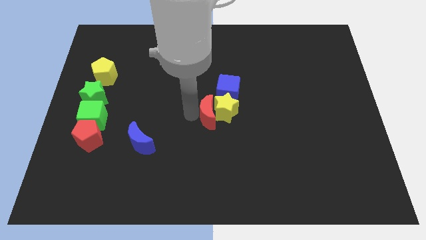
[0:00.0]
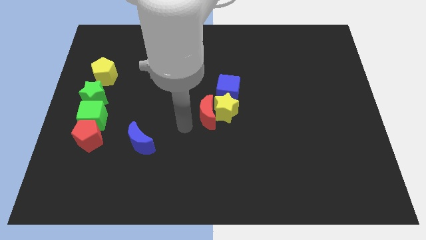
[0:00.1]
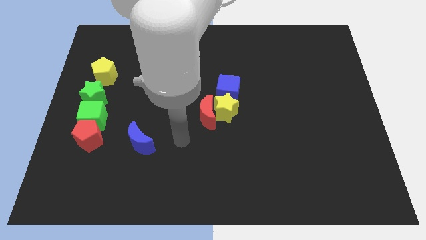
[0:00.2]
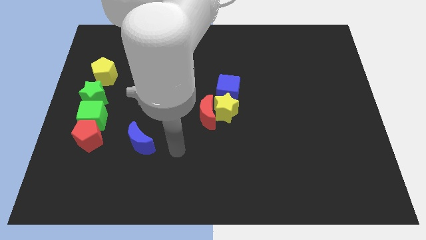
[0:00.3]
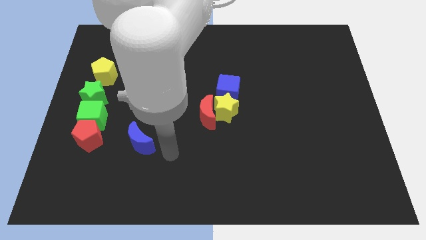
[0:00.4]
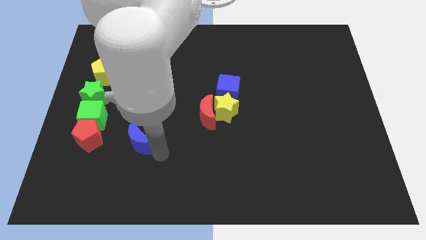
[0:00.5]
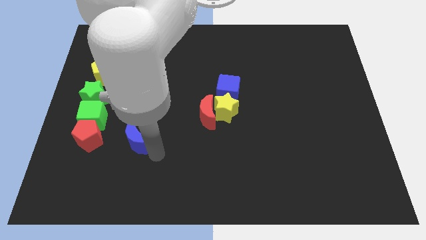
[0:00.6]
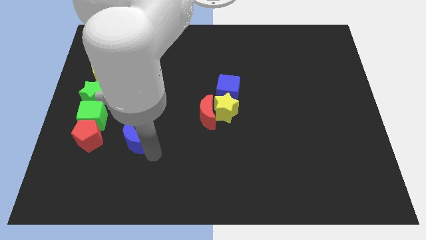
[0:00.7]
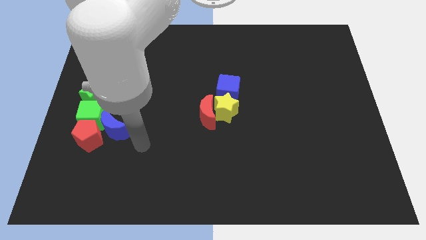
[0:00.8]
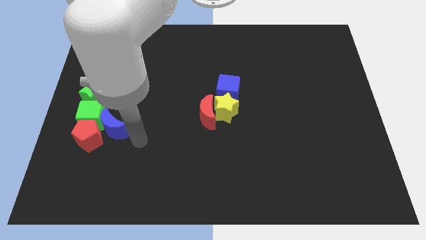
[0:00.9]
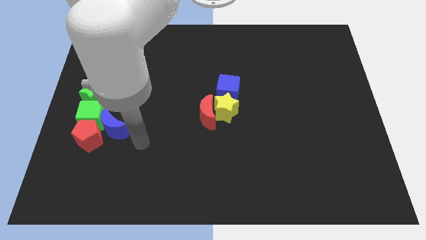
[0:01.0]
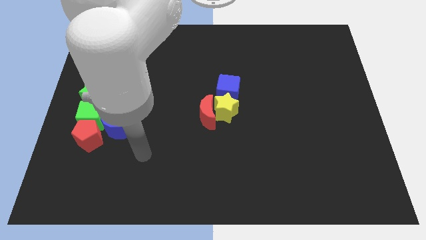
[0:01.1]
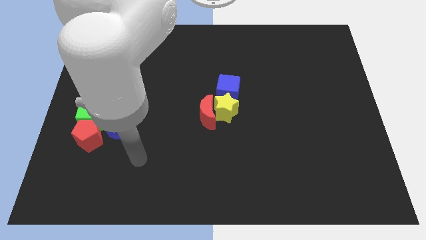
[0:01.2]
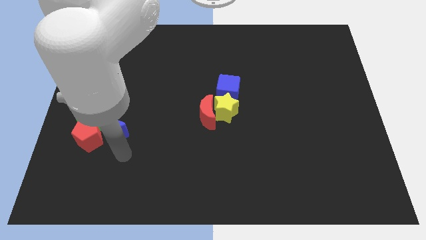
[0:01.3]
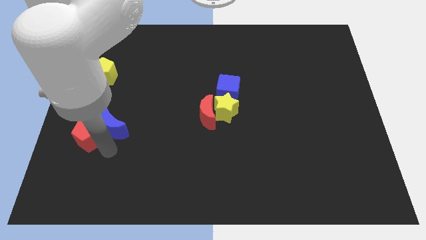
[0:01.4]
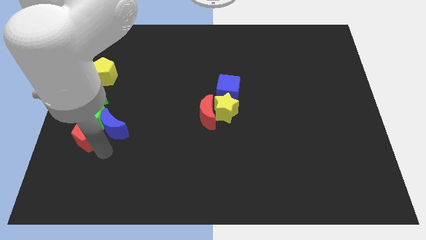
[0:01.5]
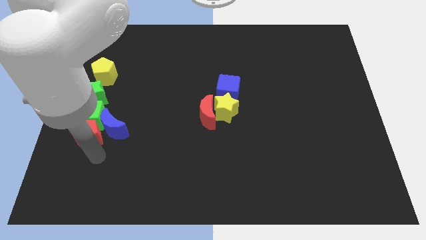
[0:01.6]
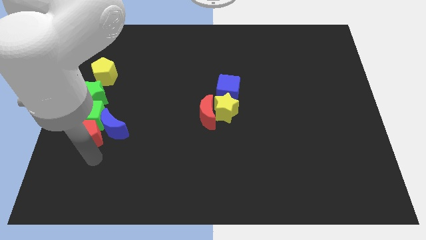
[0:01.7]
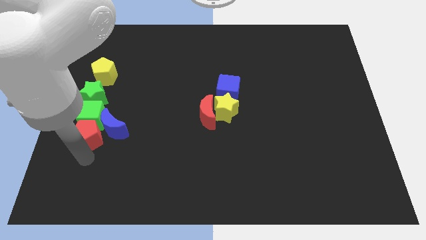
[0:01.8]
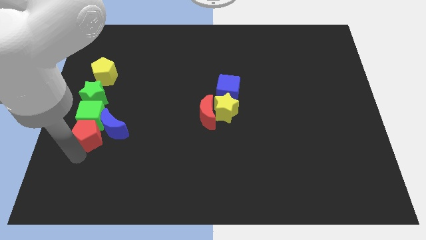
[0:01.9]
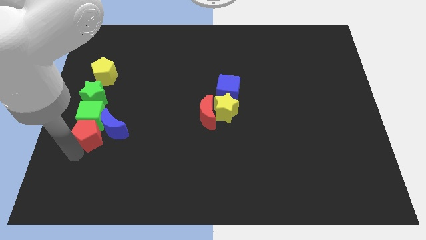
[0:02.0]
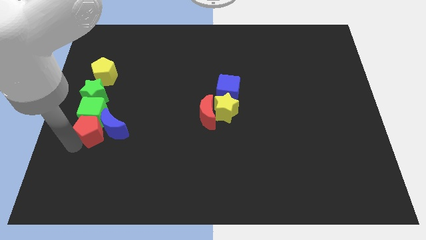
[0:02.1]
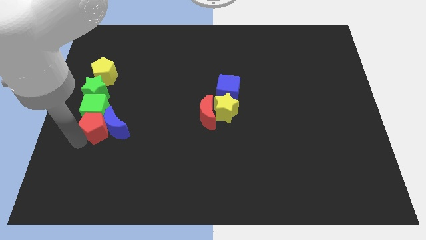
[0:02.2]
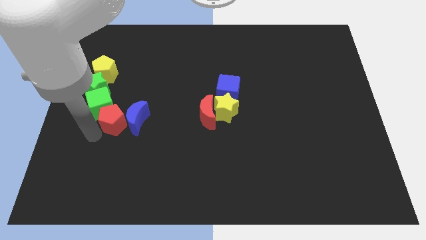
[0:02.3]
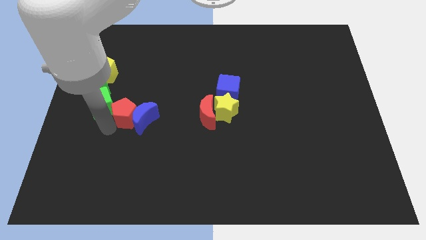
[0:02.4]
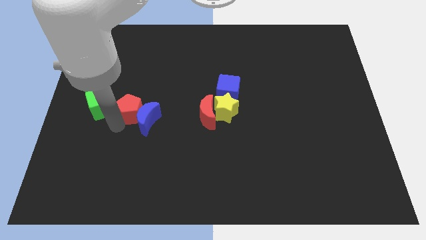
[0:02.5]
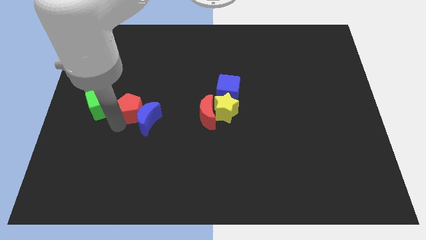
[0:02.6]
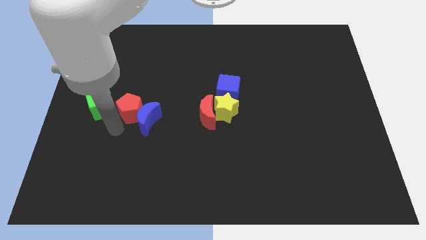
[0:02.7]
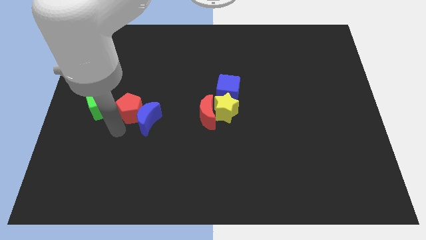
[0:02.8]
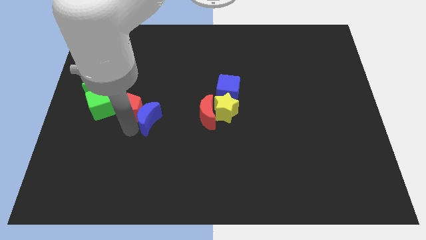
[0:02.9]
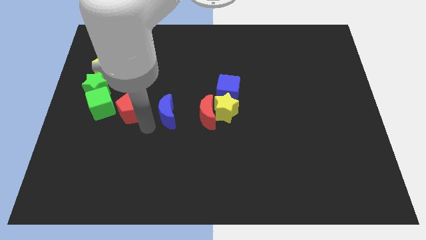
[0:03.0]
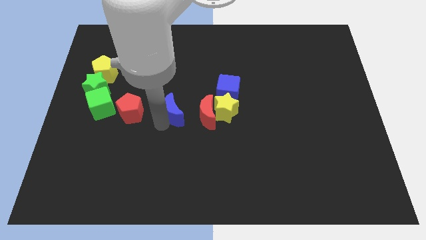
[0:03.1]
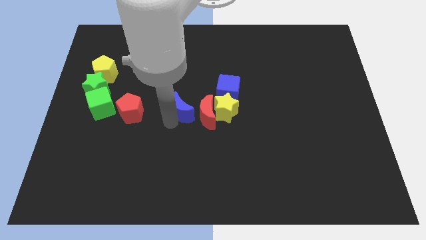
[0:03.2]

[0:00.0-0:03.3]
slide the blue moon in between the red pentagon and red moon

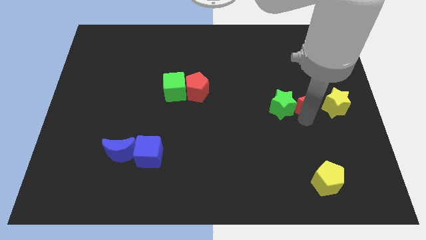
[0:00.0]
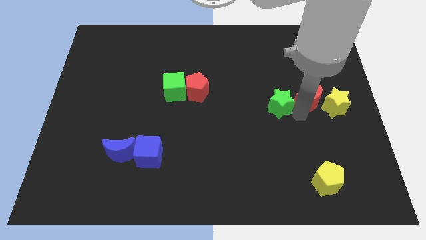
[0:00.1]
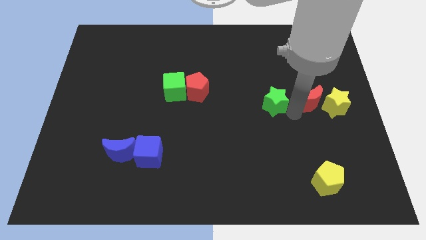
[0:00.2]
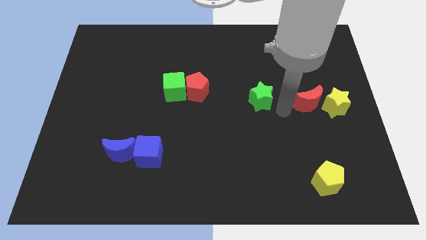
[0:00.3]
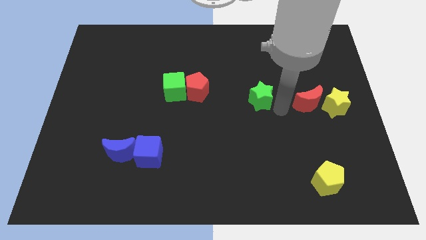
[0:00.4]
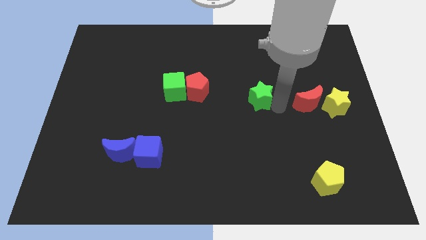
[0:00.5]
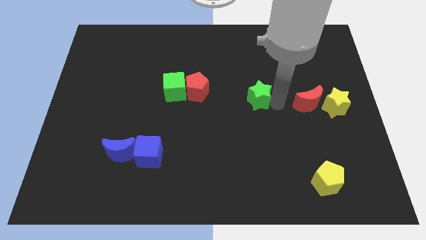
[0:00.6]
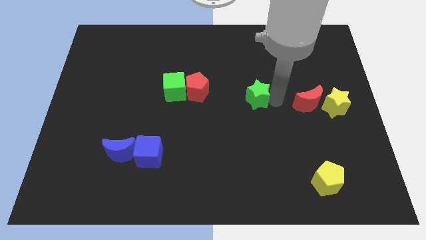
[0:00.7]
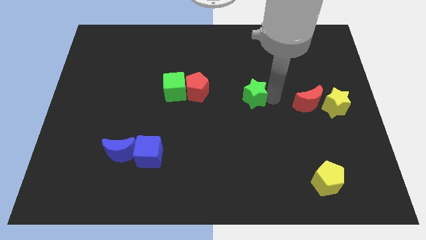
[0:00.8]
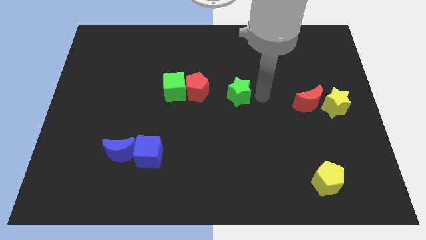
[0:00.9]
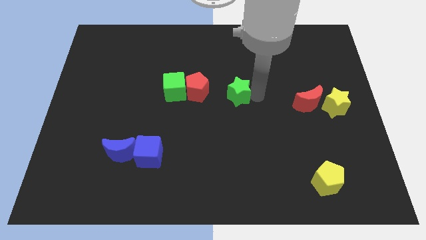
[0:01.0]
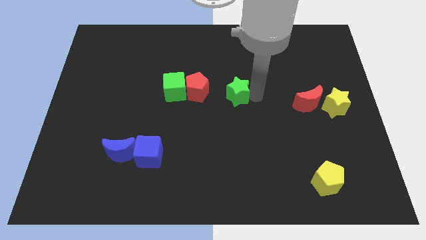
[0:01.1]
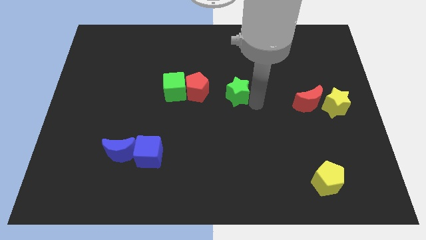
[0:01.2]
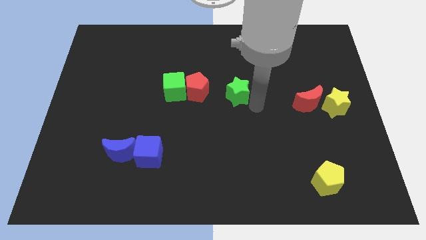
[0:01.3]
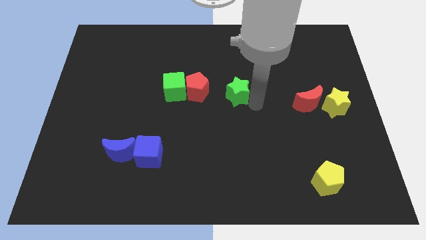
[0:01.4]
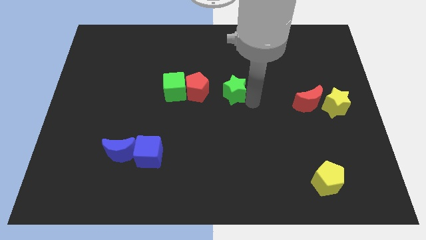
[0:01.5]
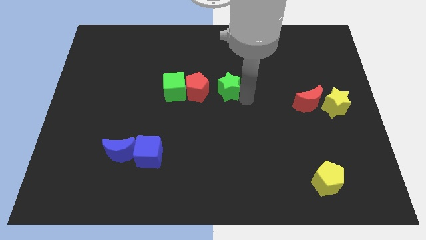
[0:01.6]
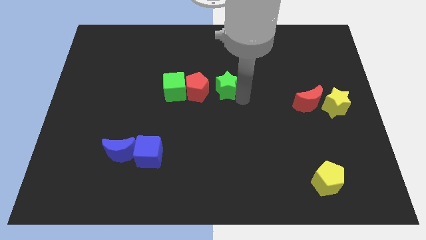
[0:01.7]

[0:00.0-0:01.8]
separate the green star from the red crescent

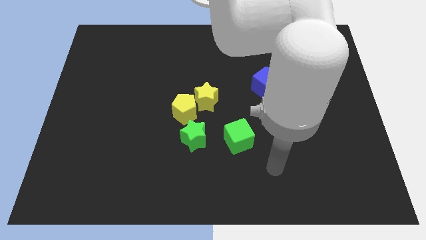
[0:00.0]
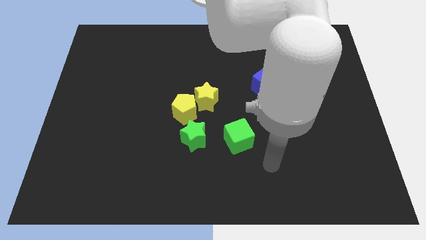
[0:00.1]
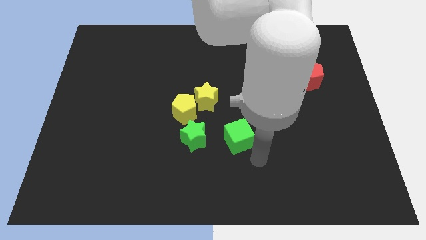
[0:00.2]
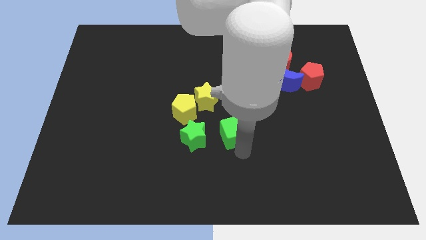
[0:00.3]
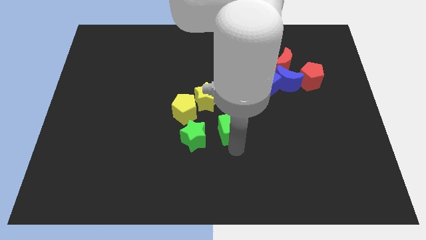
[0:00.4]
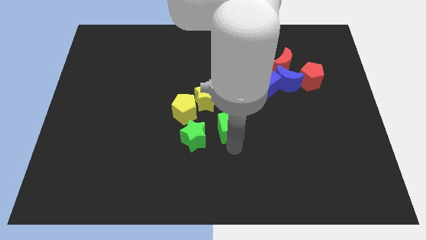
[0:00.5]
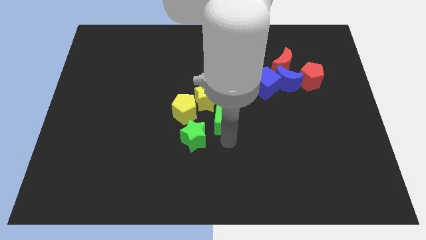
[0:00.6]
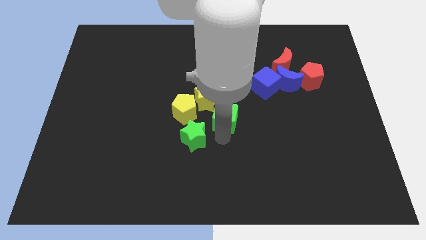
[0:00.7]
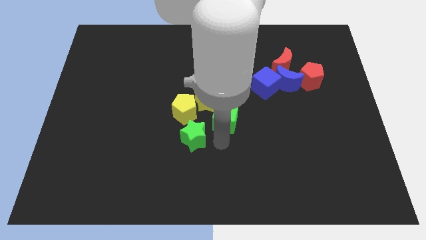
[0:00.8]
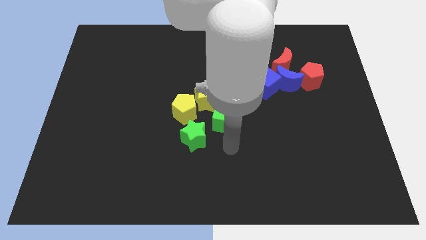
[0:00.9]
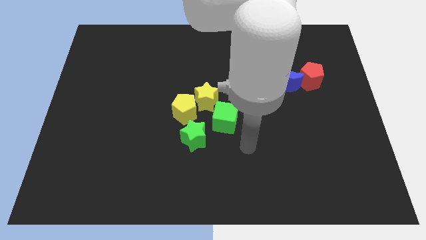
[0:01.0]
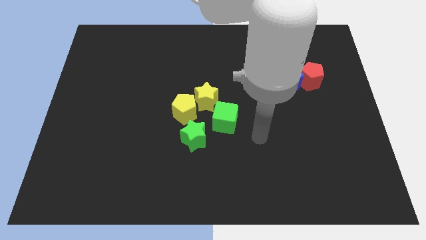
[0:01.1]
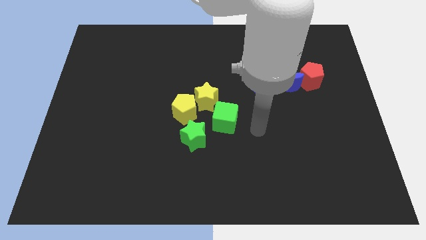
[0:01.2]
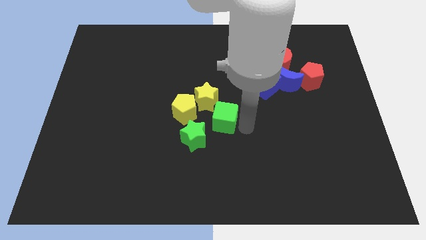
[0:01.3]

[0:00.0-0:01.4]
place green cube below the yellow star

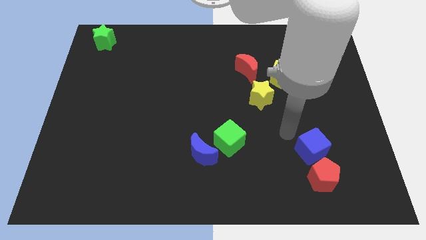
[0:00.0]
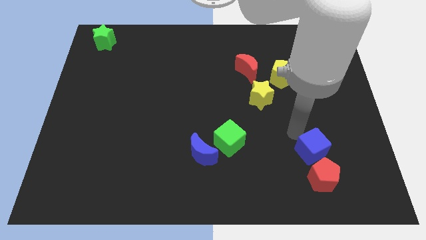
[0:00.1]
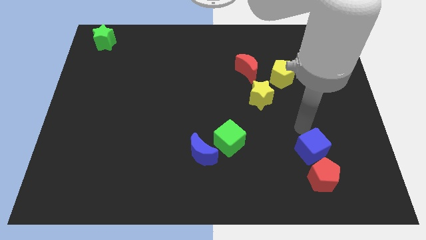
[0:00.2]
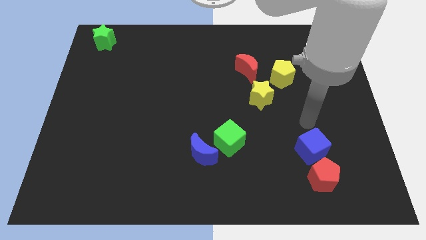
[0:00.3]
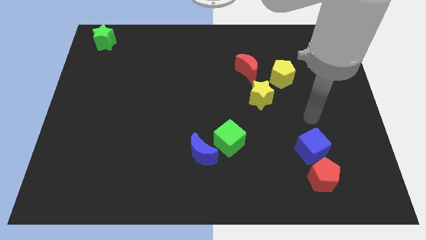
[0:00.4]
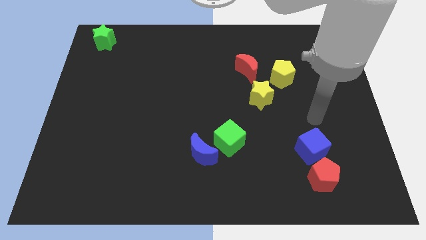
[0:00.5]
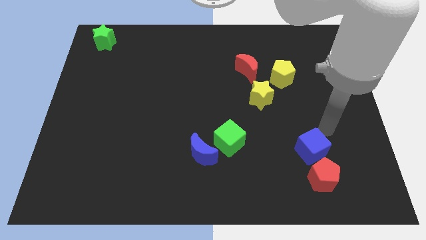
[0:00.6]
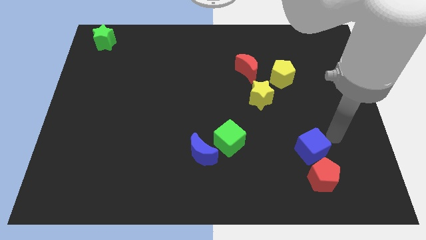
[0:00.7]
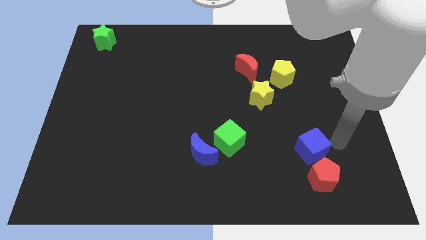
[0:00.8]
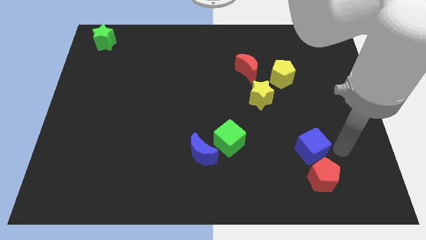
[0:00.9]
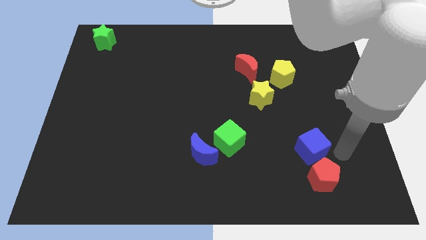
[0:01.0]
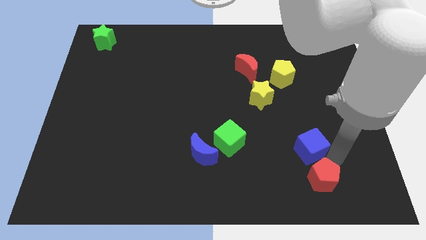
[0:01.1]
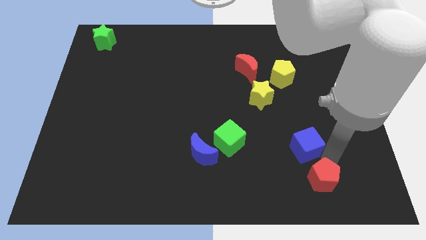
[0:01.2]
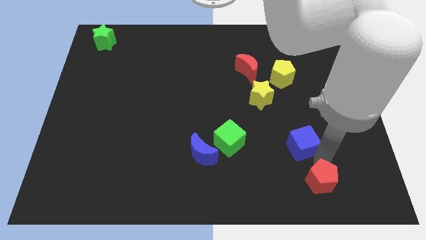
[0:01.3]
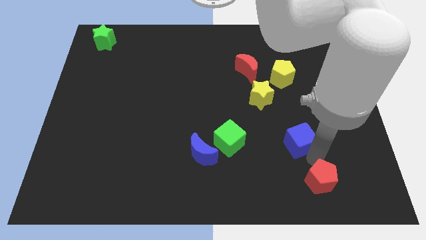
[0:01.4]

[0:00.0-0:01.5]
place the blue cube parallel right to the green cube

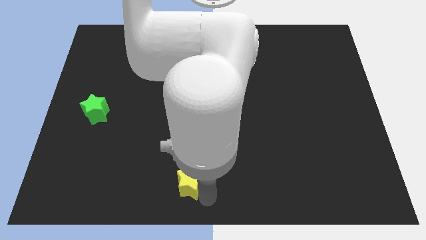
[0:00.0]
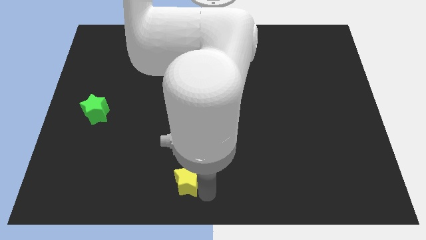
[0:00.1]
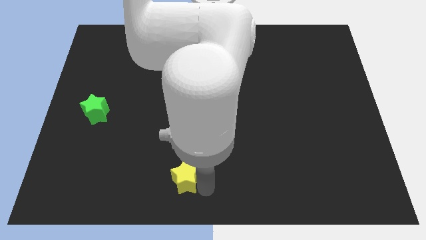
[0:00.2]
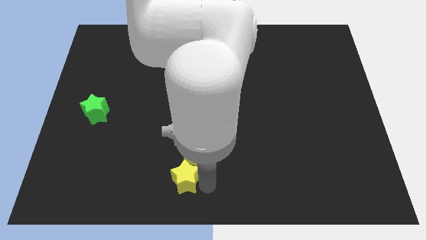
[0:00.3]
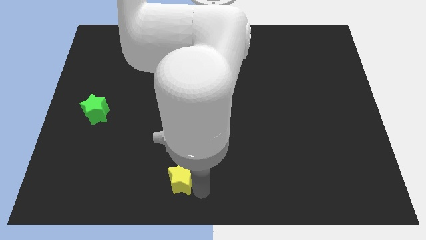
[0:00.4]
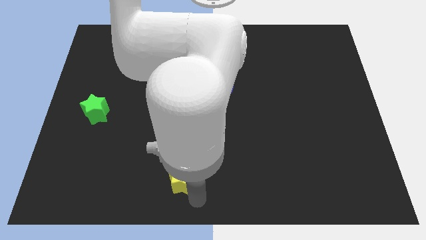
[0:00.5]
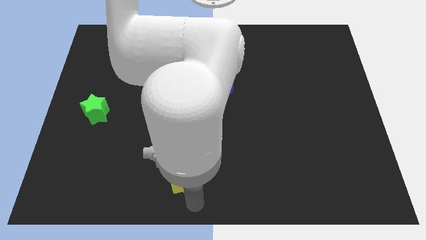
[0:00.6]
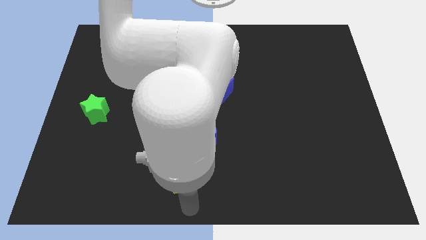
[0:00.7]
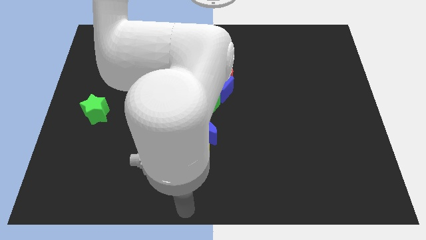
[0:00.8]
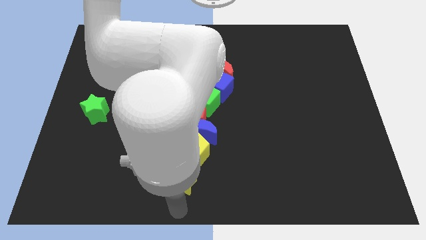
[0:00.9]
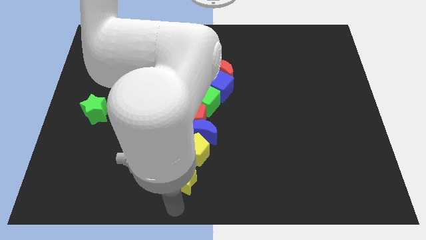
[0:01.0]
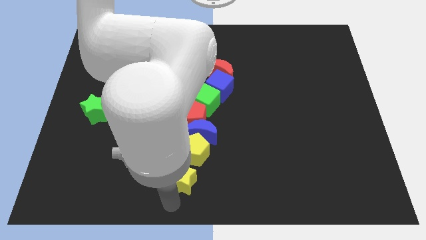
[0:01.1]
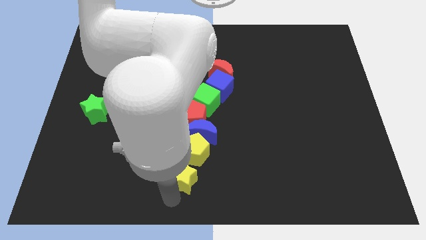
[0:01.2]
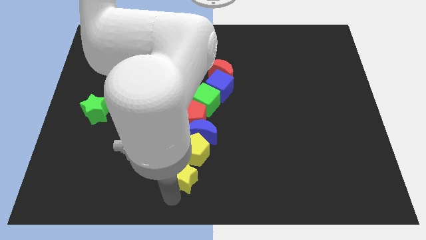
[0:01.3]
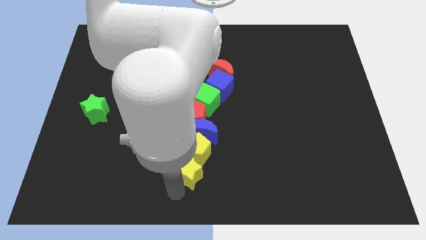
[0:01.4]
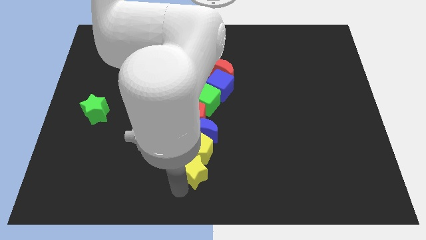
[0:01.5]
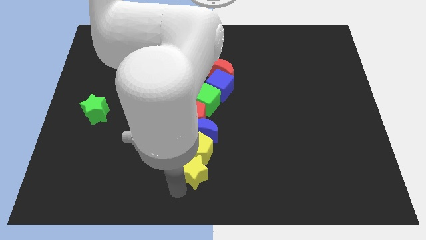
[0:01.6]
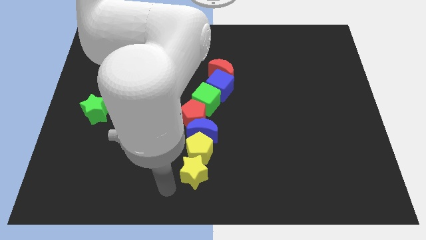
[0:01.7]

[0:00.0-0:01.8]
push the yellow star into the yellow pentagon
